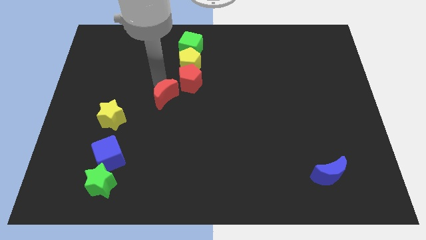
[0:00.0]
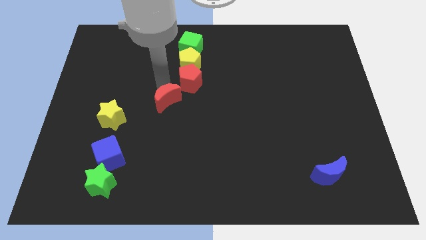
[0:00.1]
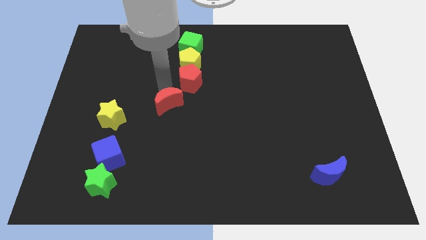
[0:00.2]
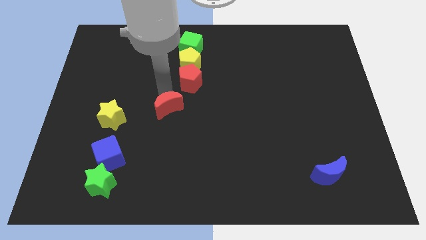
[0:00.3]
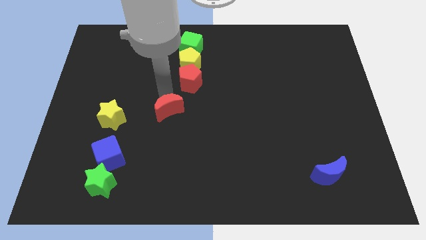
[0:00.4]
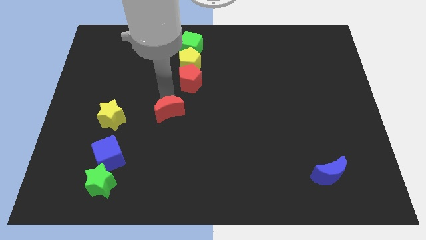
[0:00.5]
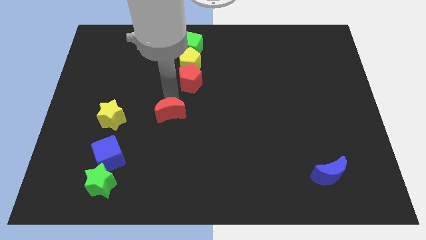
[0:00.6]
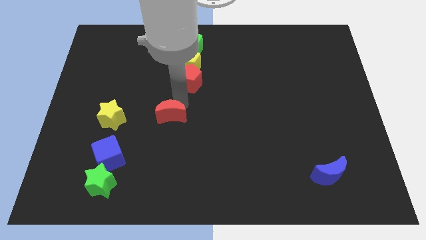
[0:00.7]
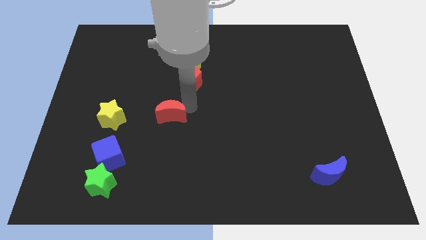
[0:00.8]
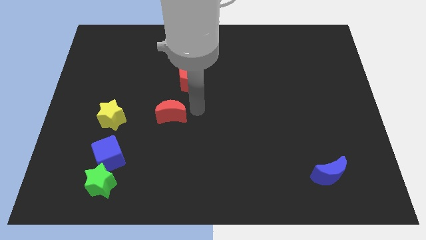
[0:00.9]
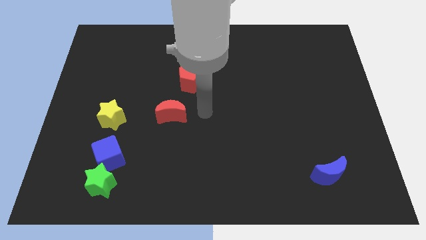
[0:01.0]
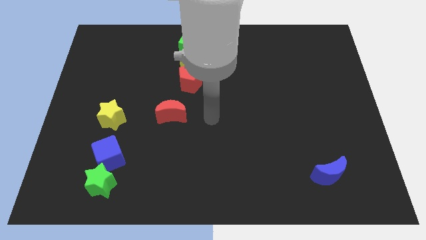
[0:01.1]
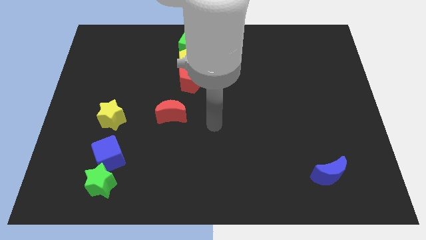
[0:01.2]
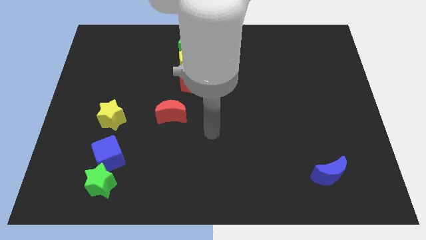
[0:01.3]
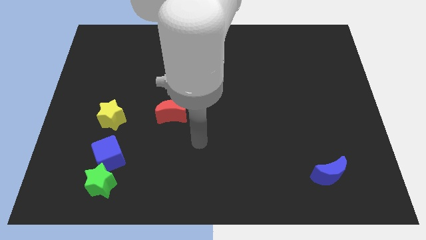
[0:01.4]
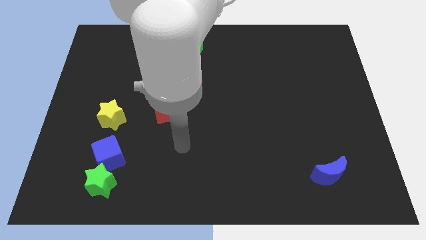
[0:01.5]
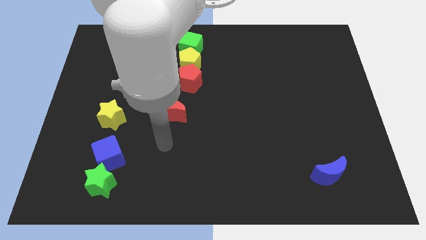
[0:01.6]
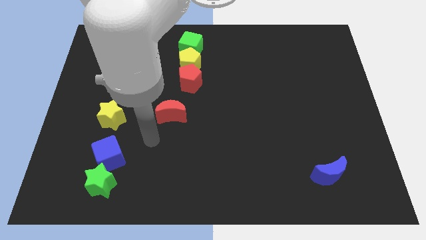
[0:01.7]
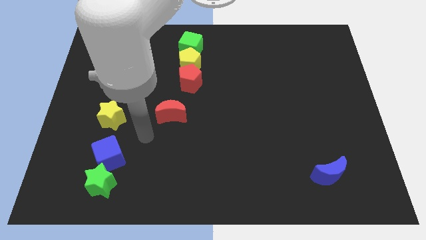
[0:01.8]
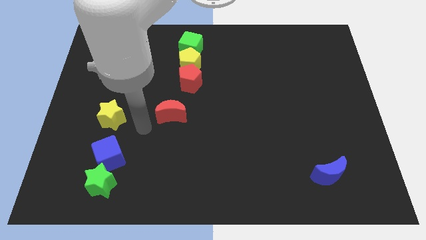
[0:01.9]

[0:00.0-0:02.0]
push red moon towards the bottom of the board

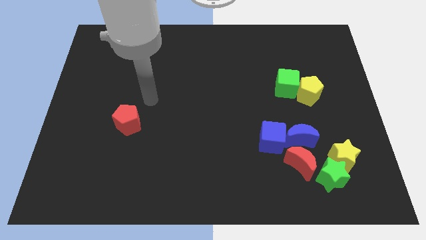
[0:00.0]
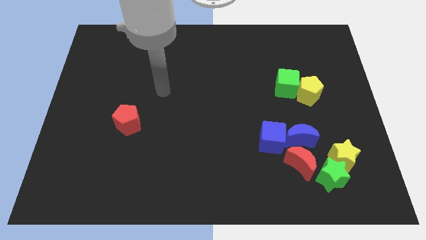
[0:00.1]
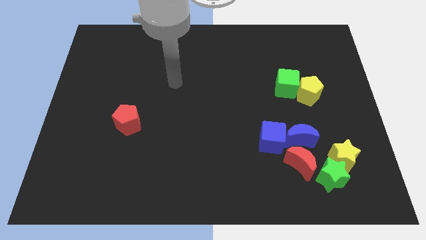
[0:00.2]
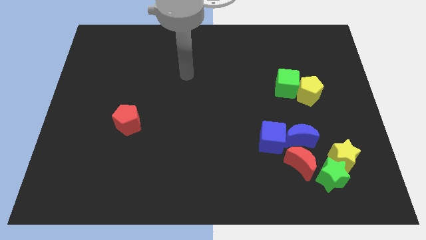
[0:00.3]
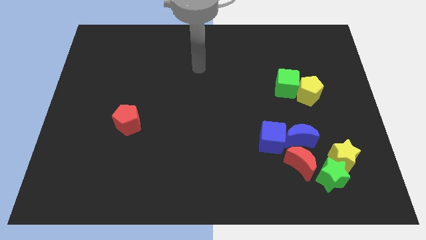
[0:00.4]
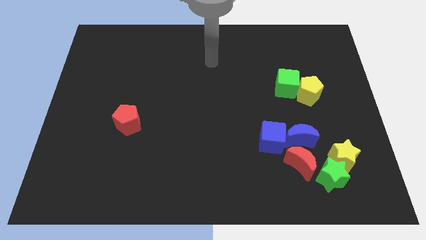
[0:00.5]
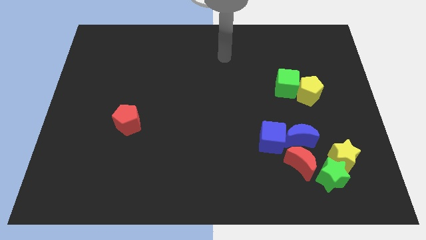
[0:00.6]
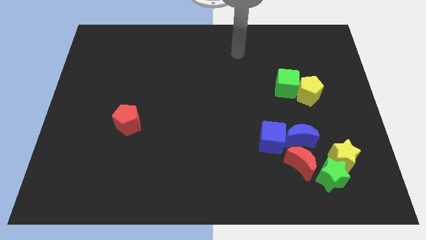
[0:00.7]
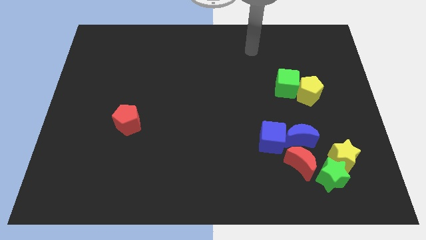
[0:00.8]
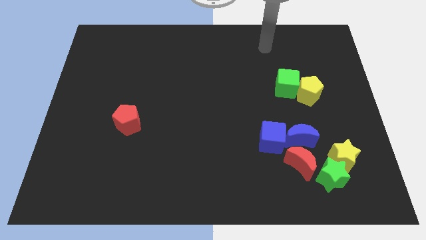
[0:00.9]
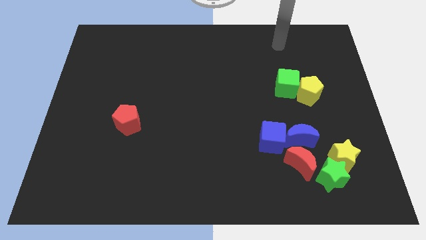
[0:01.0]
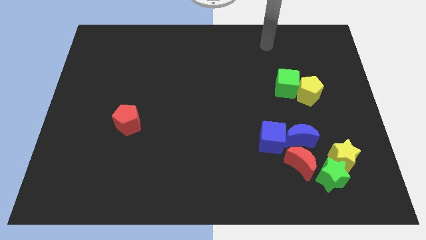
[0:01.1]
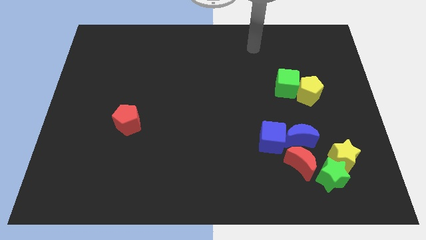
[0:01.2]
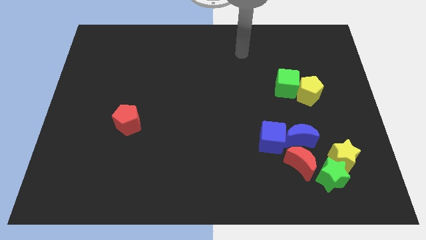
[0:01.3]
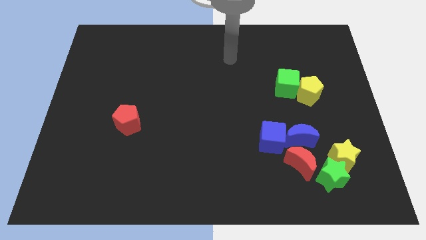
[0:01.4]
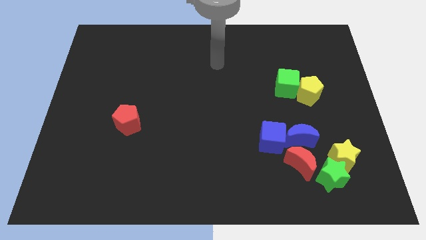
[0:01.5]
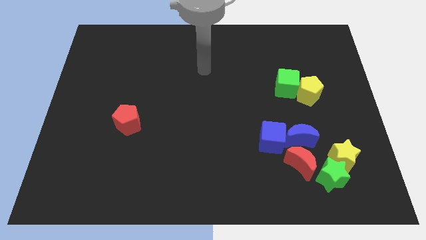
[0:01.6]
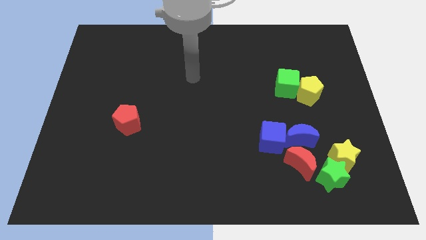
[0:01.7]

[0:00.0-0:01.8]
point your arm towards center of the board

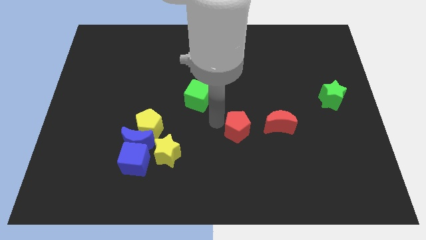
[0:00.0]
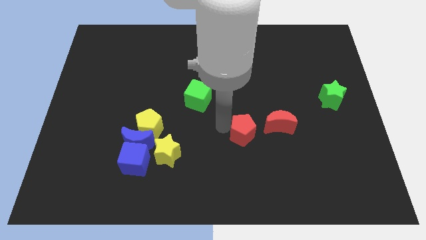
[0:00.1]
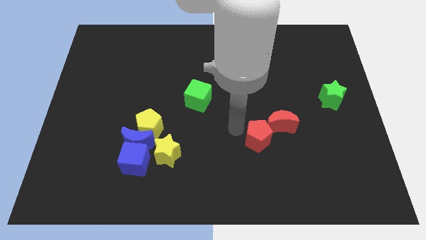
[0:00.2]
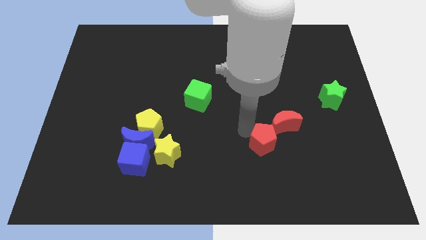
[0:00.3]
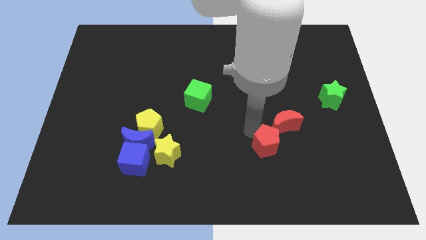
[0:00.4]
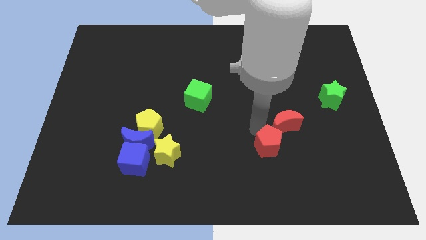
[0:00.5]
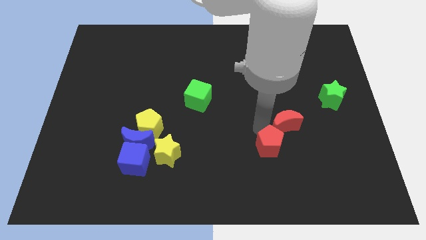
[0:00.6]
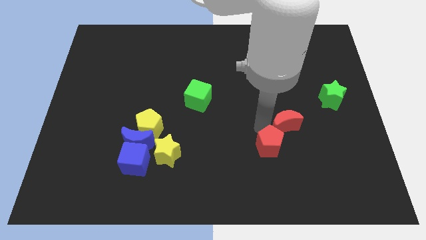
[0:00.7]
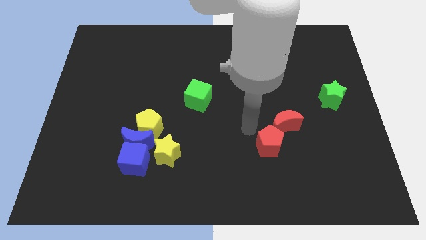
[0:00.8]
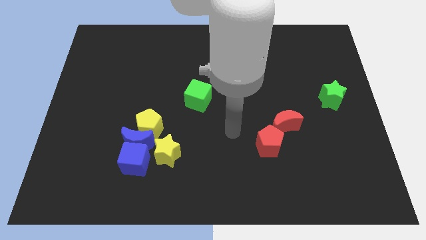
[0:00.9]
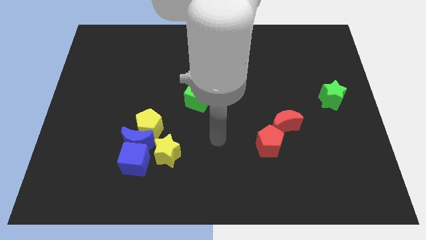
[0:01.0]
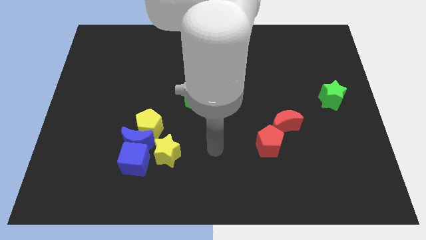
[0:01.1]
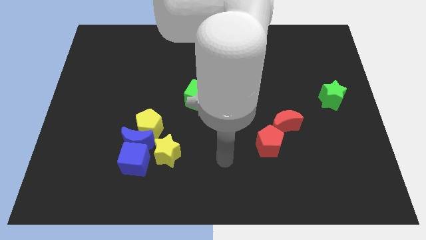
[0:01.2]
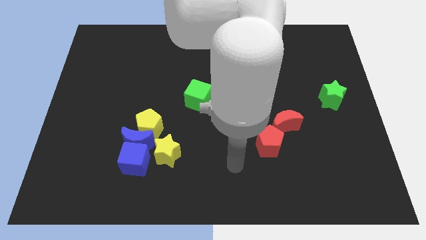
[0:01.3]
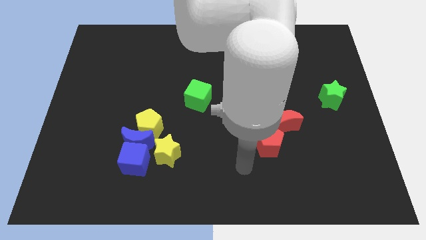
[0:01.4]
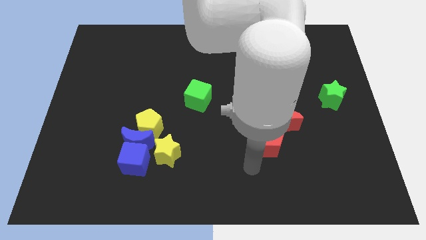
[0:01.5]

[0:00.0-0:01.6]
move the red pentagon close to red moon

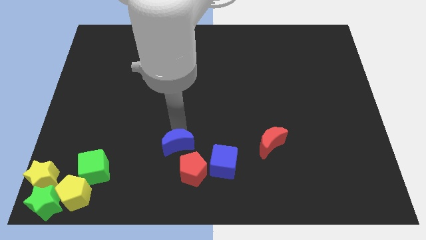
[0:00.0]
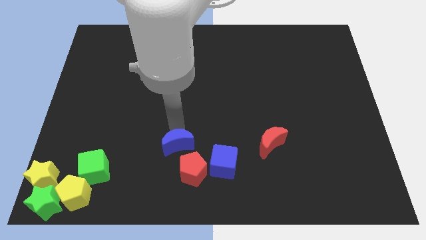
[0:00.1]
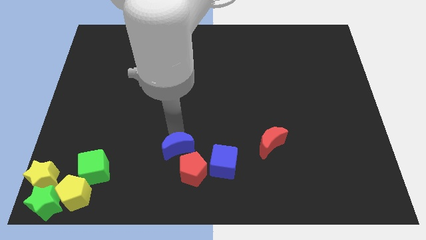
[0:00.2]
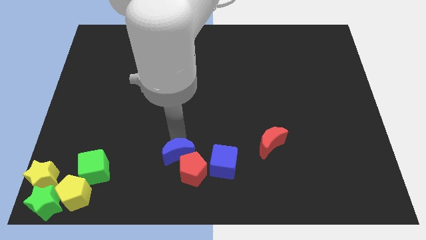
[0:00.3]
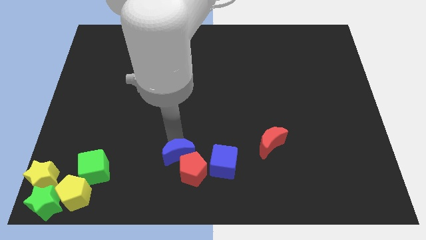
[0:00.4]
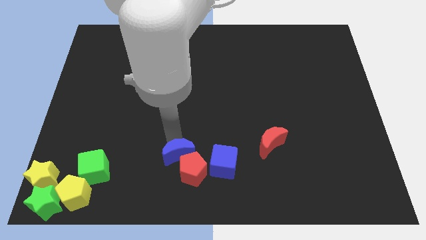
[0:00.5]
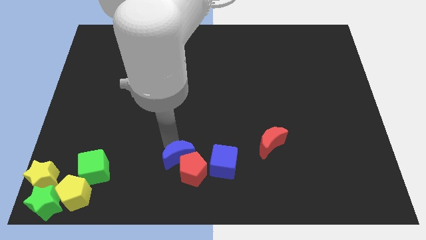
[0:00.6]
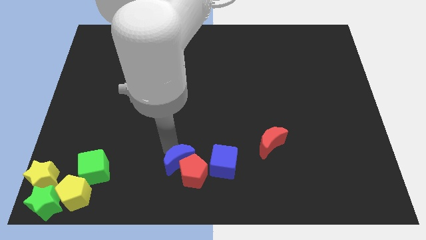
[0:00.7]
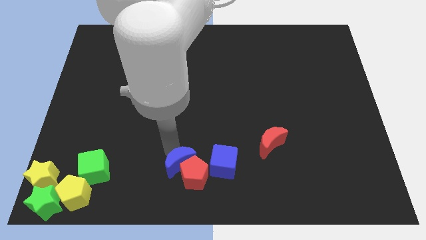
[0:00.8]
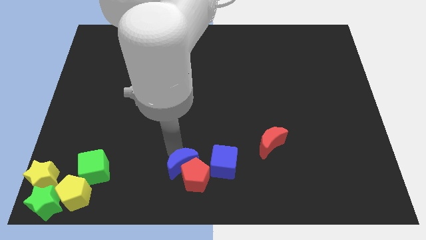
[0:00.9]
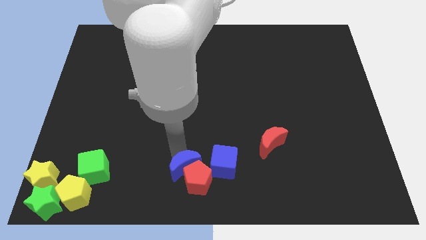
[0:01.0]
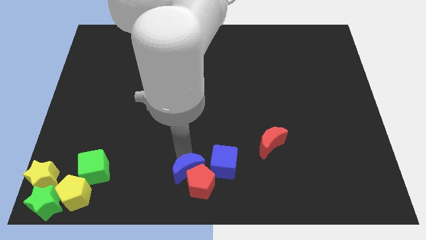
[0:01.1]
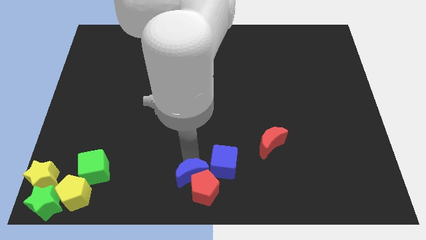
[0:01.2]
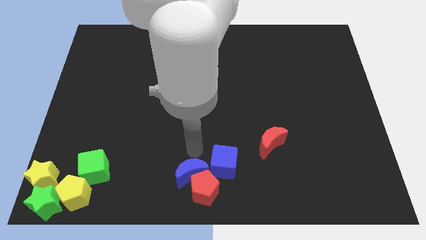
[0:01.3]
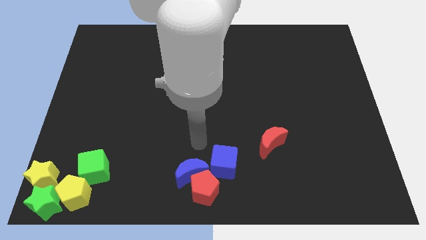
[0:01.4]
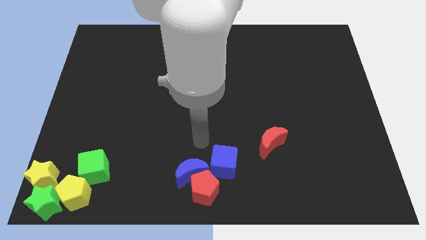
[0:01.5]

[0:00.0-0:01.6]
move blue moon into red pentagon

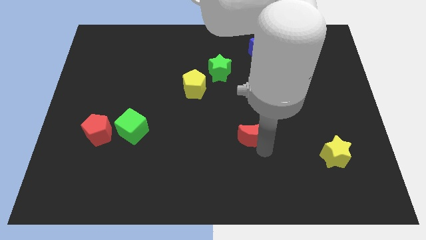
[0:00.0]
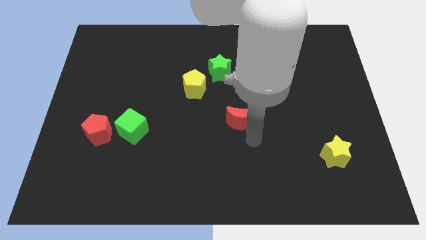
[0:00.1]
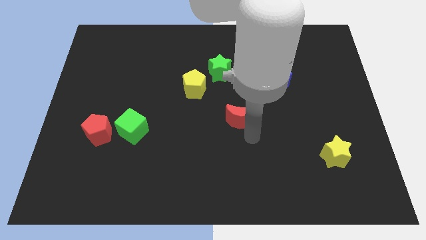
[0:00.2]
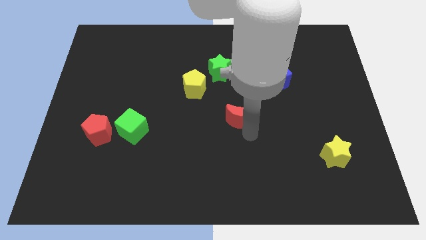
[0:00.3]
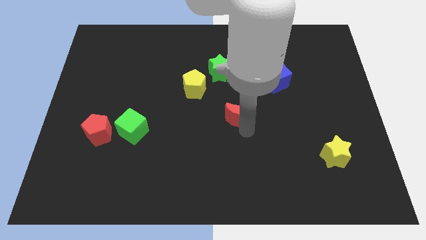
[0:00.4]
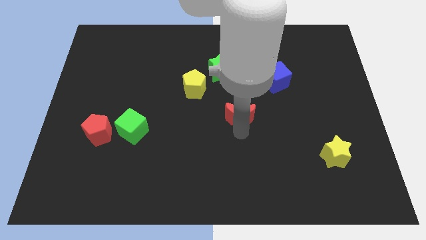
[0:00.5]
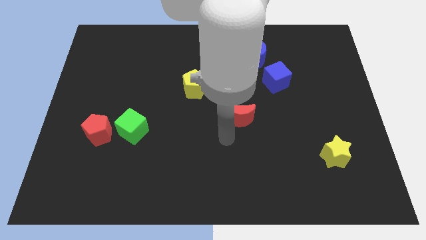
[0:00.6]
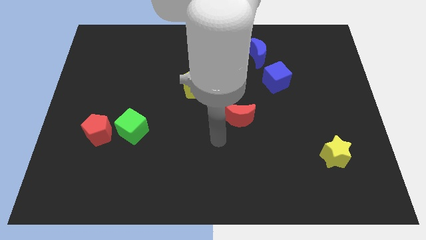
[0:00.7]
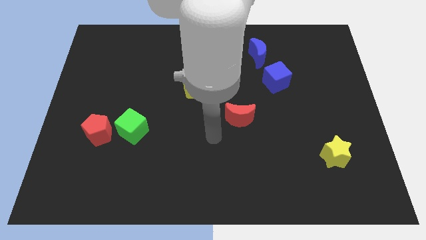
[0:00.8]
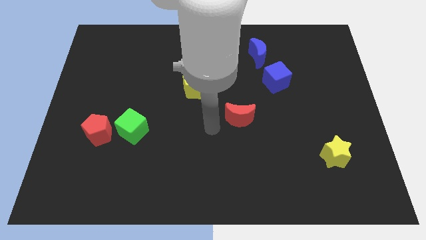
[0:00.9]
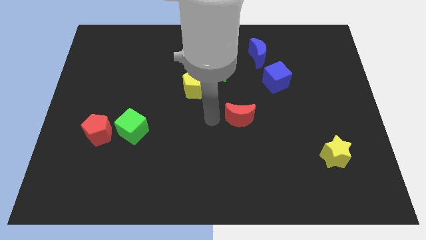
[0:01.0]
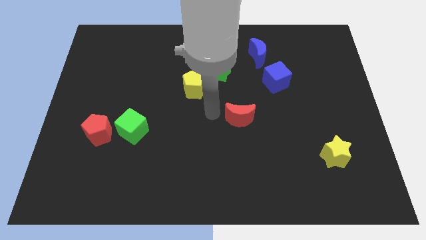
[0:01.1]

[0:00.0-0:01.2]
move the red crescent to the center of the board

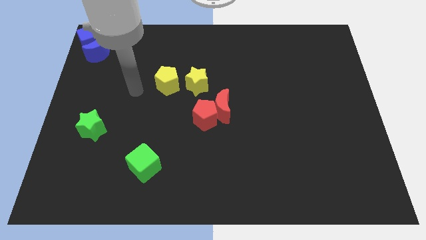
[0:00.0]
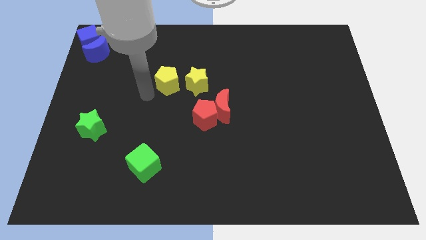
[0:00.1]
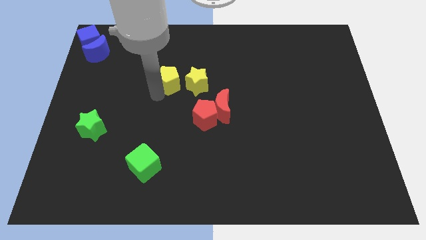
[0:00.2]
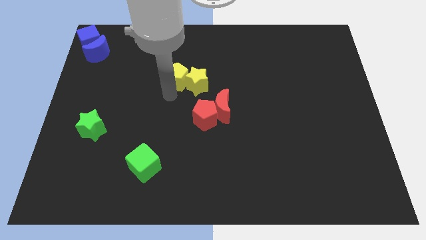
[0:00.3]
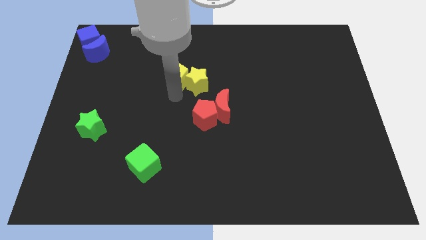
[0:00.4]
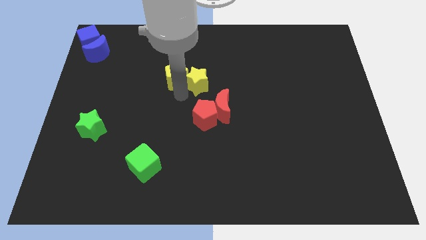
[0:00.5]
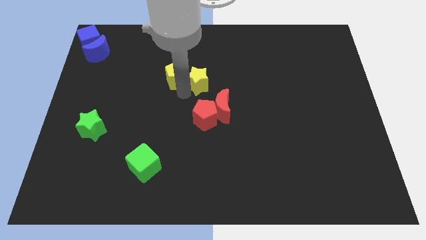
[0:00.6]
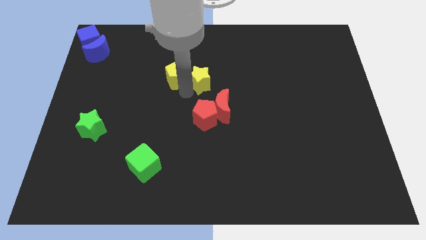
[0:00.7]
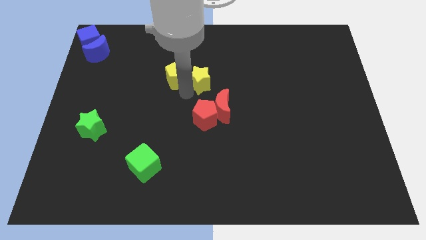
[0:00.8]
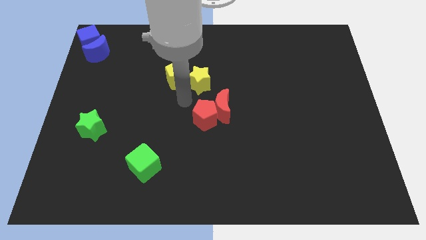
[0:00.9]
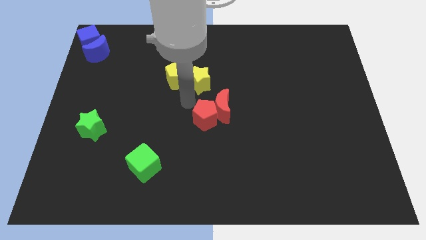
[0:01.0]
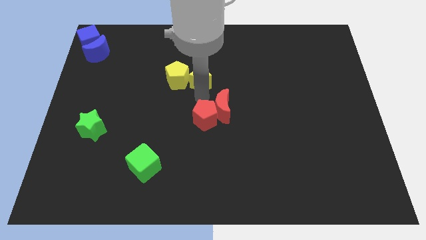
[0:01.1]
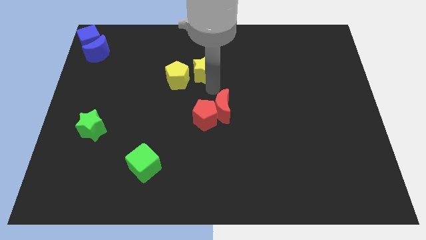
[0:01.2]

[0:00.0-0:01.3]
move the yellow pentagon into the yellow star
